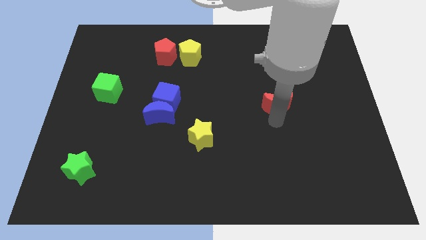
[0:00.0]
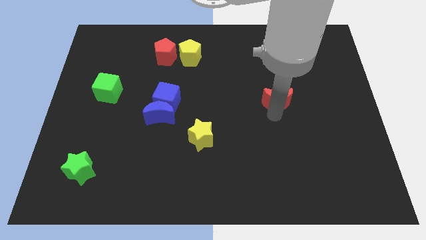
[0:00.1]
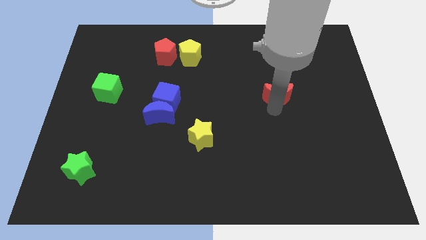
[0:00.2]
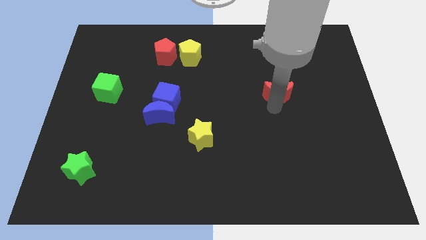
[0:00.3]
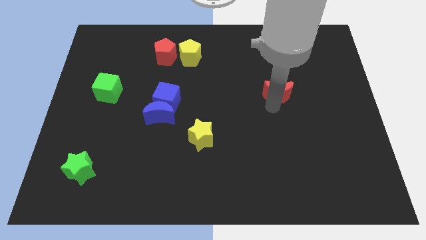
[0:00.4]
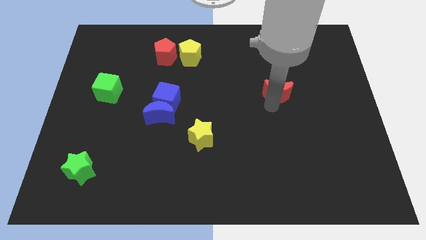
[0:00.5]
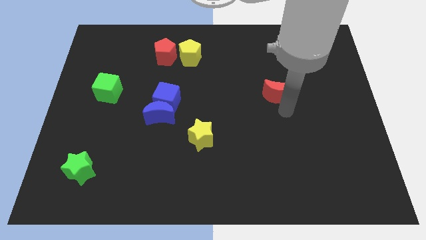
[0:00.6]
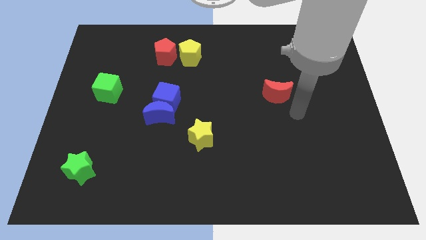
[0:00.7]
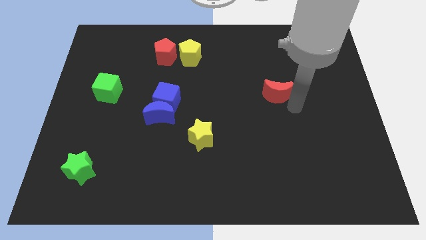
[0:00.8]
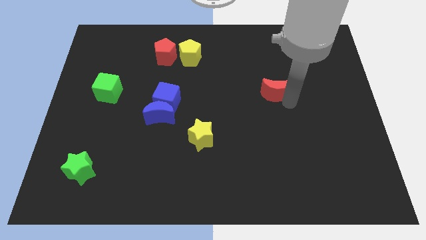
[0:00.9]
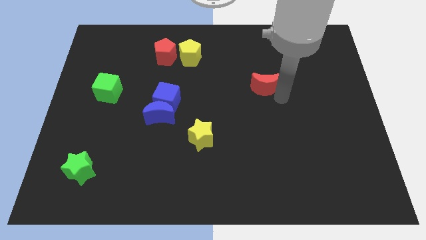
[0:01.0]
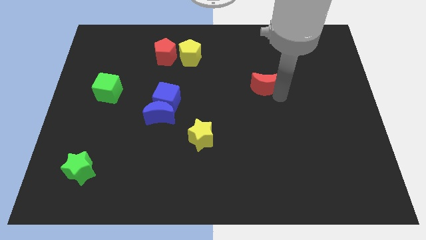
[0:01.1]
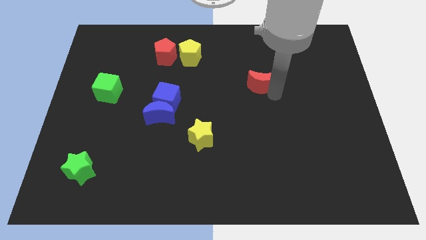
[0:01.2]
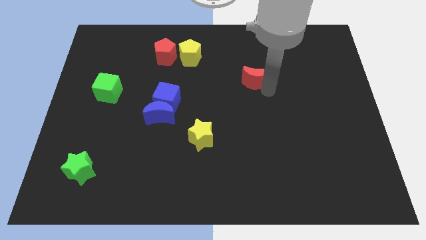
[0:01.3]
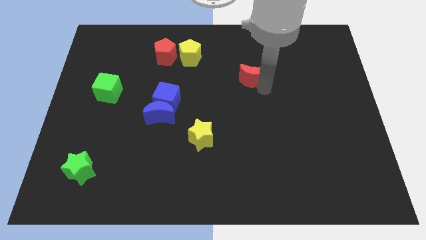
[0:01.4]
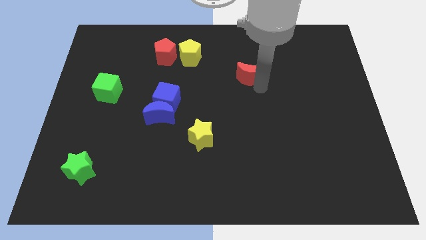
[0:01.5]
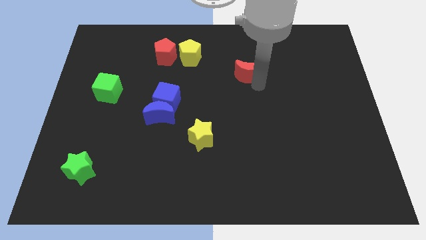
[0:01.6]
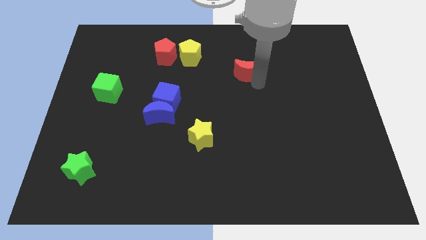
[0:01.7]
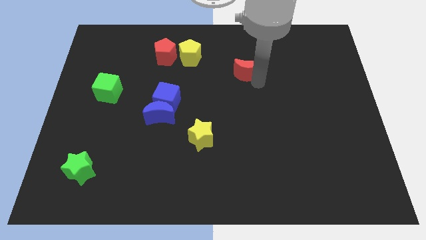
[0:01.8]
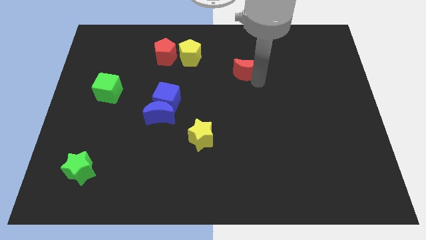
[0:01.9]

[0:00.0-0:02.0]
push the red crescent slightly towards the top center of the board

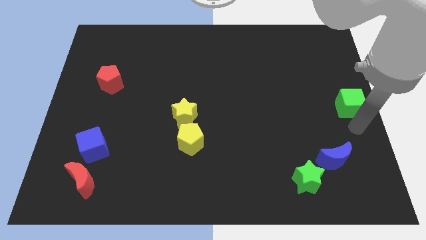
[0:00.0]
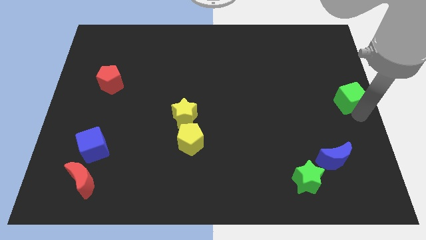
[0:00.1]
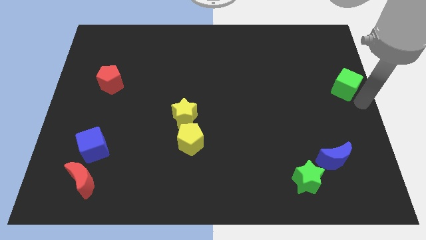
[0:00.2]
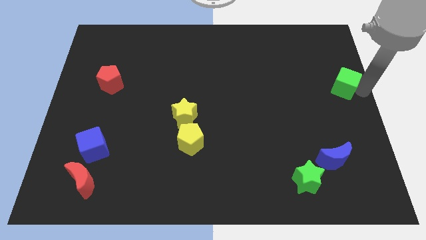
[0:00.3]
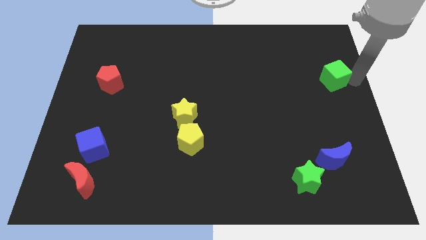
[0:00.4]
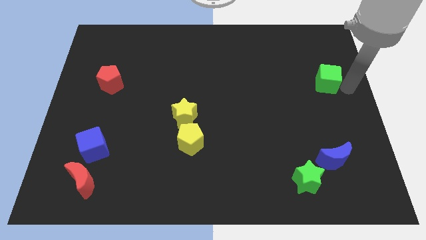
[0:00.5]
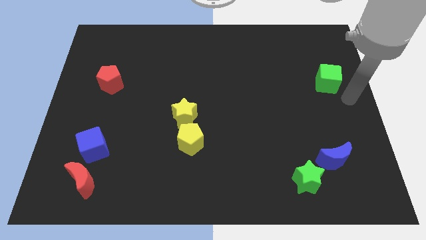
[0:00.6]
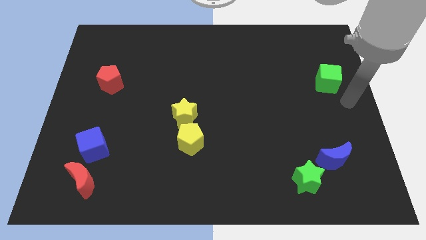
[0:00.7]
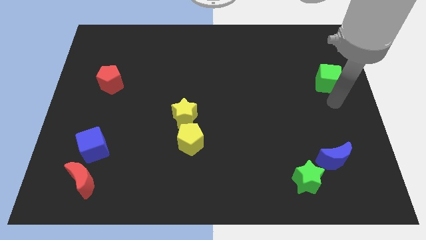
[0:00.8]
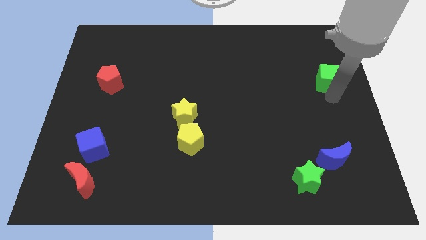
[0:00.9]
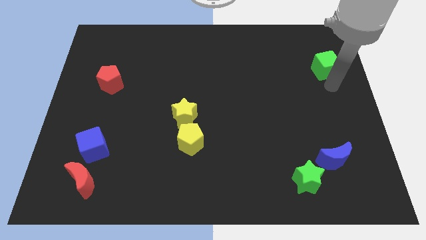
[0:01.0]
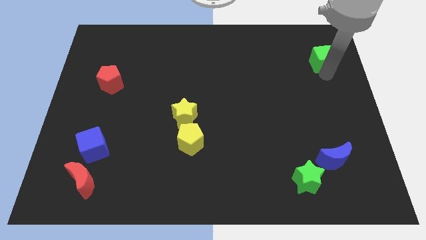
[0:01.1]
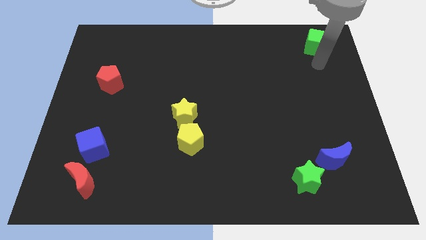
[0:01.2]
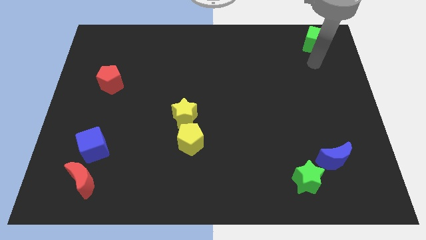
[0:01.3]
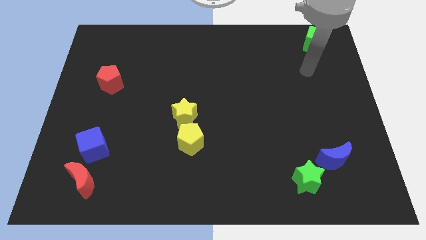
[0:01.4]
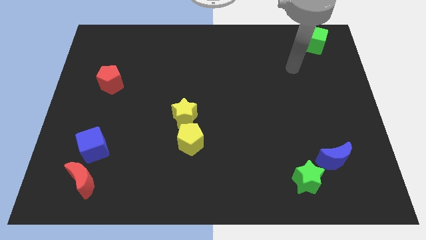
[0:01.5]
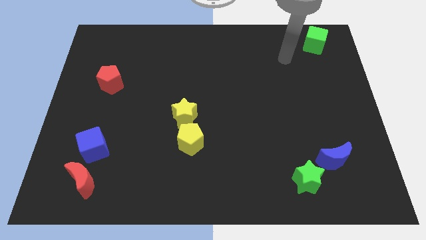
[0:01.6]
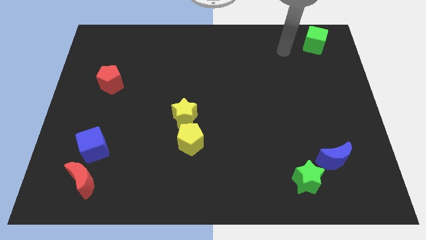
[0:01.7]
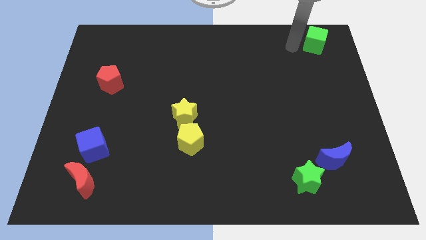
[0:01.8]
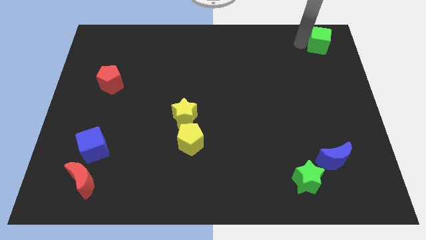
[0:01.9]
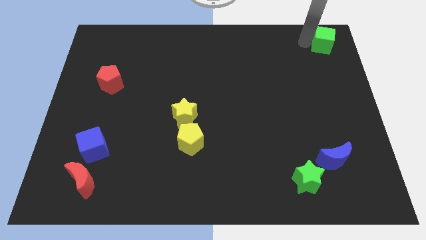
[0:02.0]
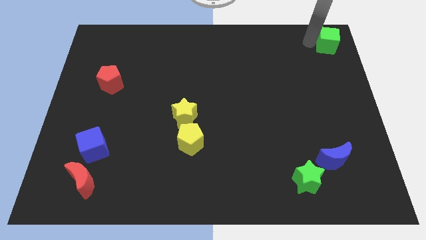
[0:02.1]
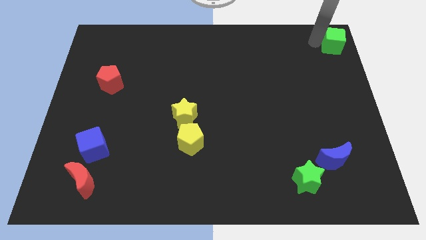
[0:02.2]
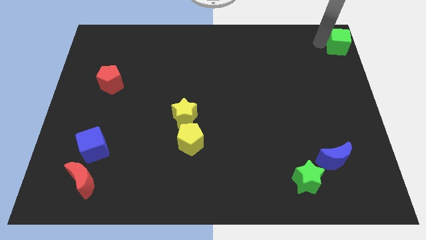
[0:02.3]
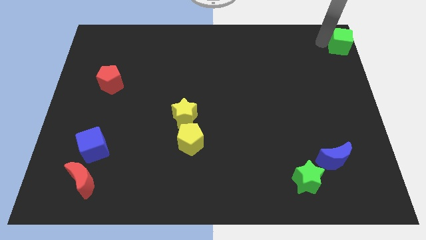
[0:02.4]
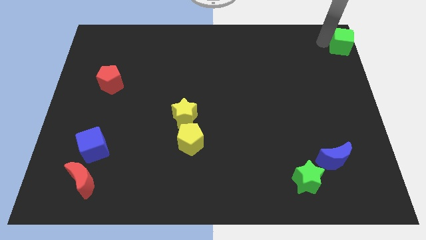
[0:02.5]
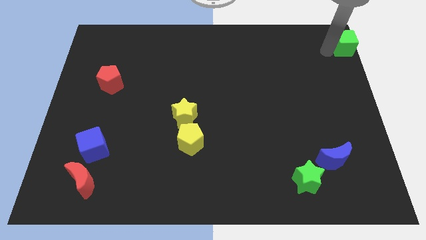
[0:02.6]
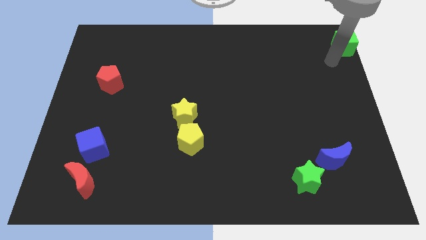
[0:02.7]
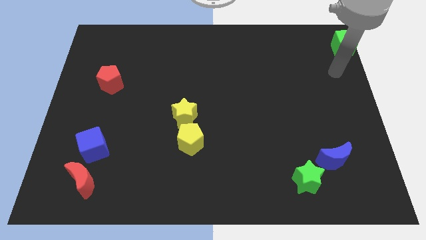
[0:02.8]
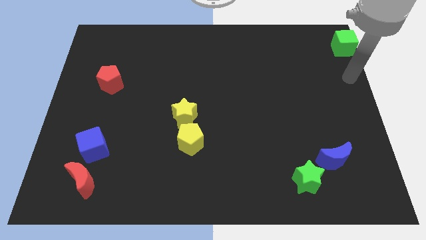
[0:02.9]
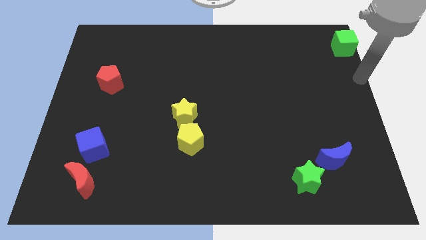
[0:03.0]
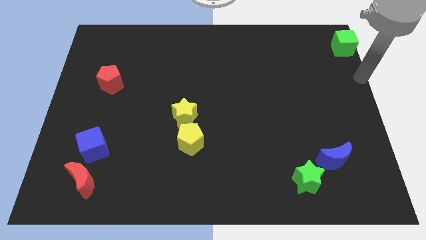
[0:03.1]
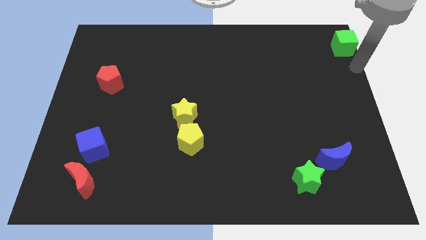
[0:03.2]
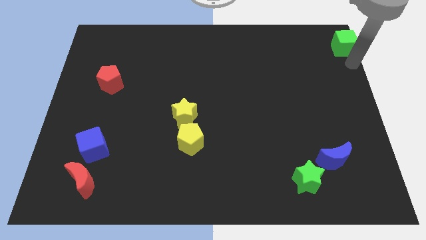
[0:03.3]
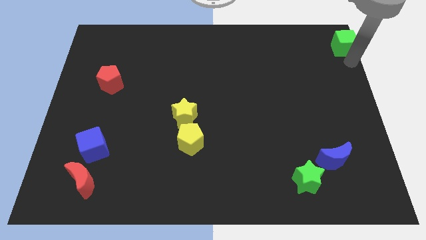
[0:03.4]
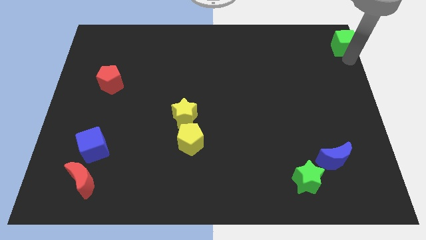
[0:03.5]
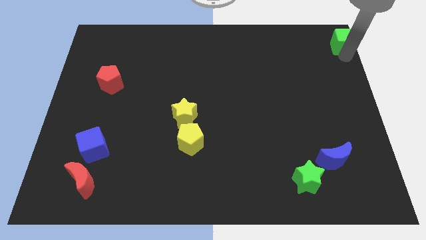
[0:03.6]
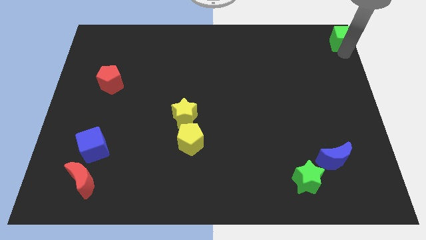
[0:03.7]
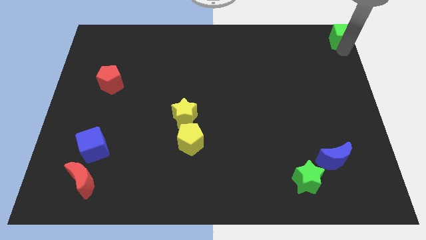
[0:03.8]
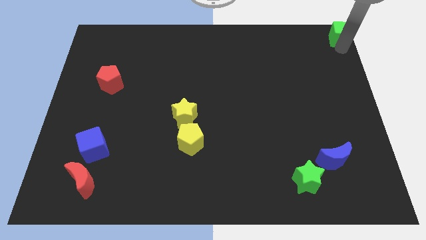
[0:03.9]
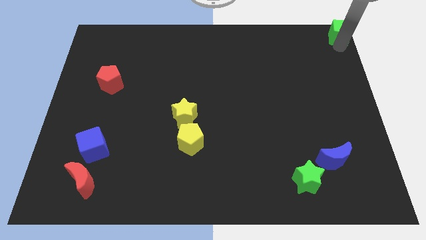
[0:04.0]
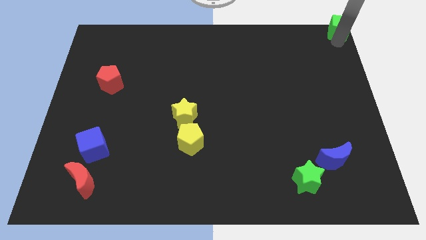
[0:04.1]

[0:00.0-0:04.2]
place the green cube at the top right corner of the board

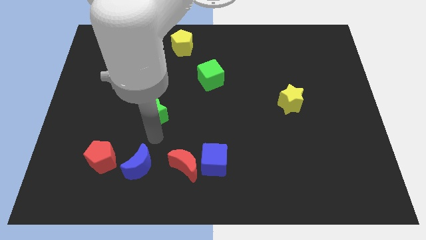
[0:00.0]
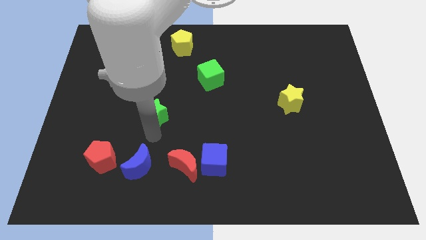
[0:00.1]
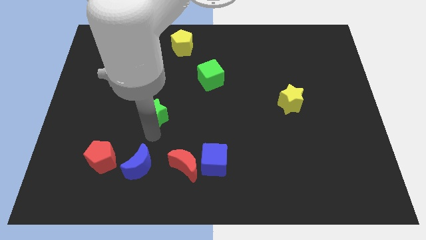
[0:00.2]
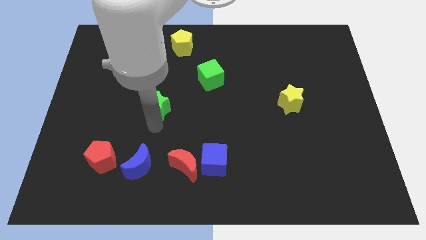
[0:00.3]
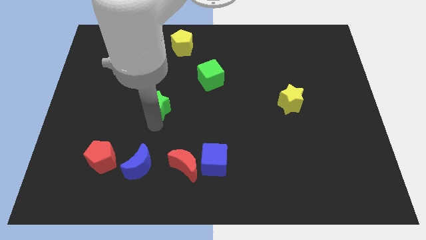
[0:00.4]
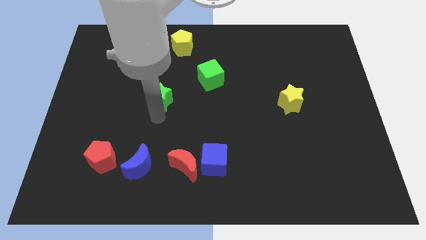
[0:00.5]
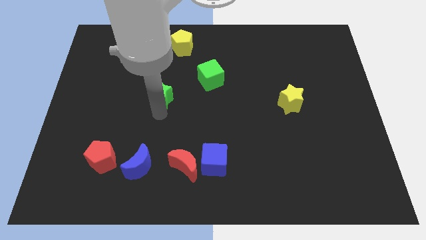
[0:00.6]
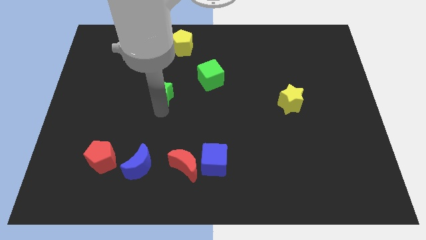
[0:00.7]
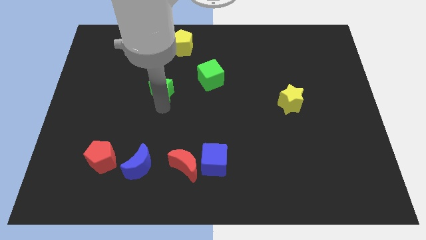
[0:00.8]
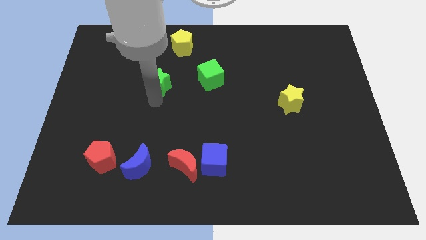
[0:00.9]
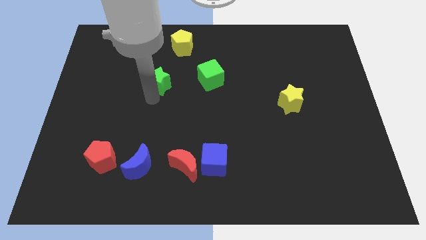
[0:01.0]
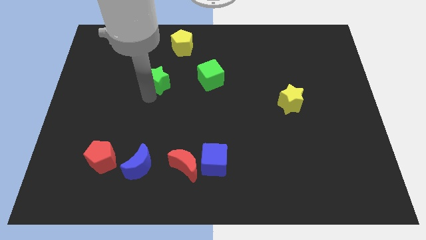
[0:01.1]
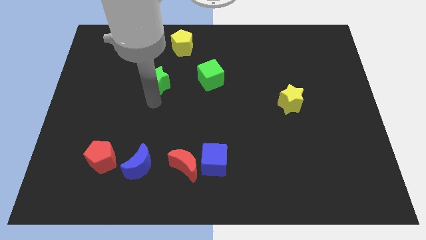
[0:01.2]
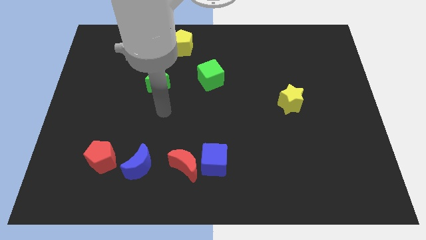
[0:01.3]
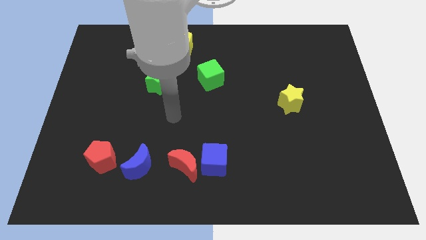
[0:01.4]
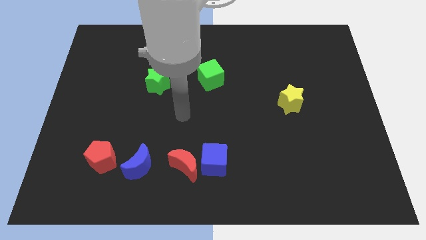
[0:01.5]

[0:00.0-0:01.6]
move the green star towards top

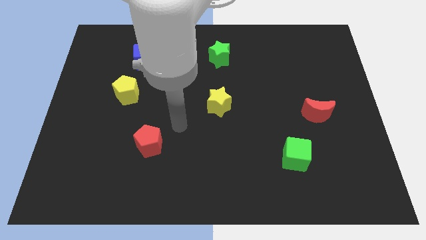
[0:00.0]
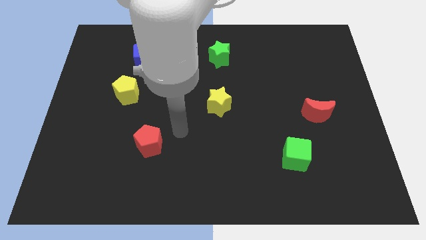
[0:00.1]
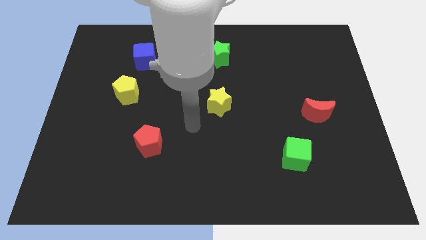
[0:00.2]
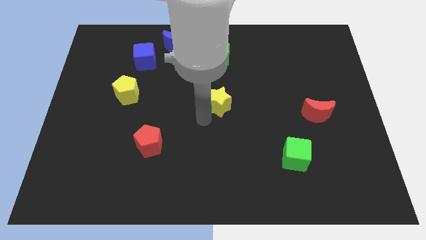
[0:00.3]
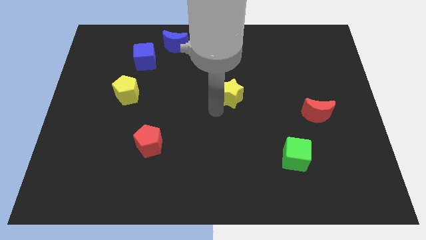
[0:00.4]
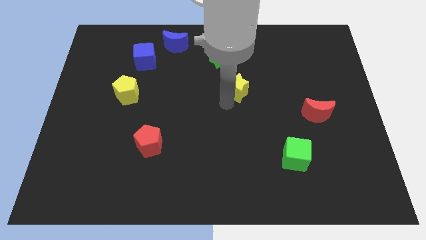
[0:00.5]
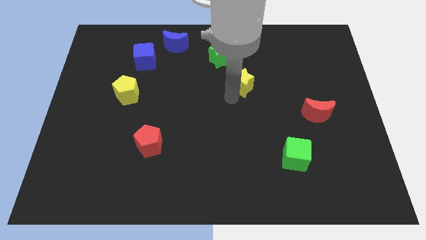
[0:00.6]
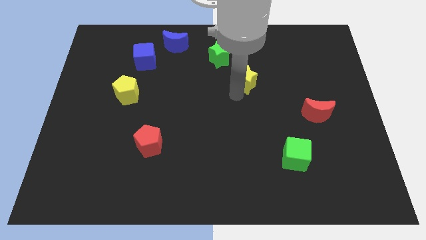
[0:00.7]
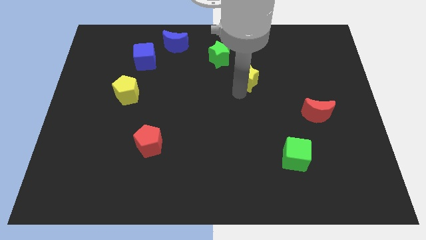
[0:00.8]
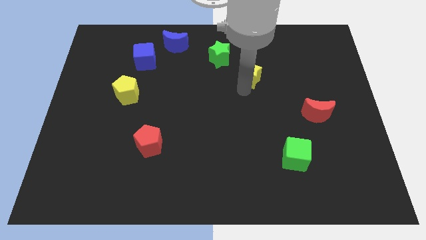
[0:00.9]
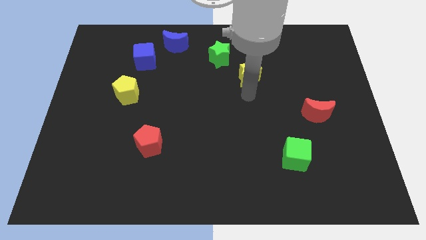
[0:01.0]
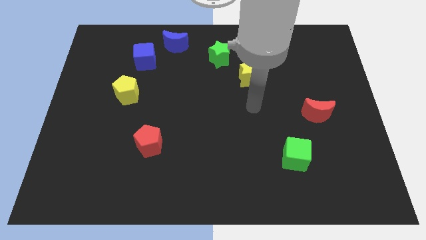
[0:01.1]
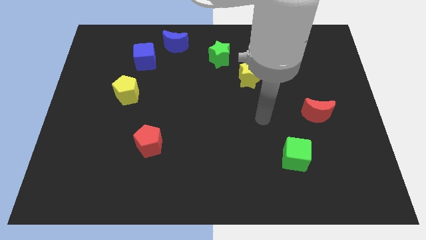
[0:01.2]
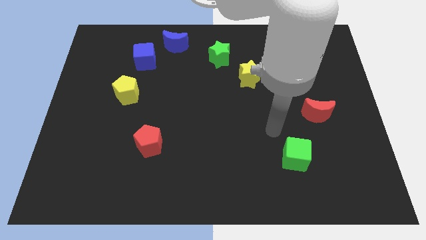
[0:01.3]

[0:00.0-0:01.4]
move yellow star horizontally
